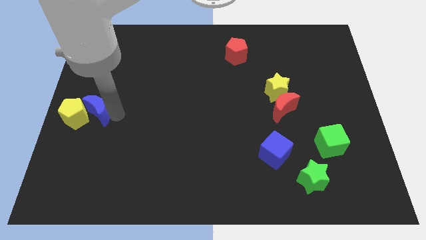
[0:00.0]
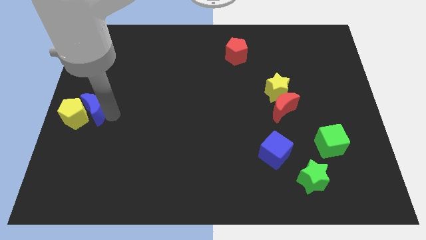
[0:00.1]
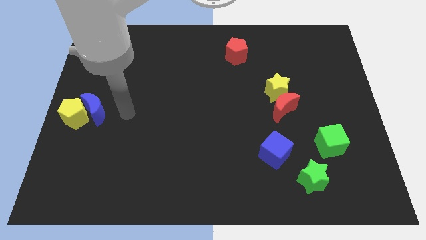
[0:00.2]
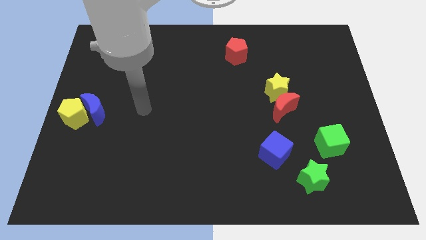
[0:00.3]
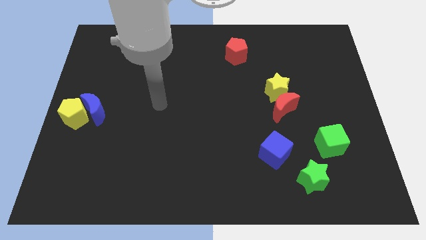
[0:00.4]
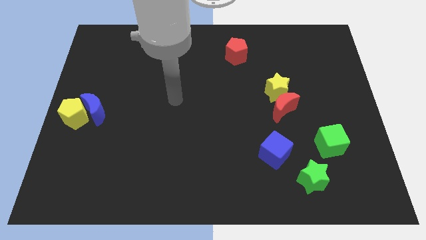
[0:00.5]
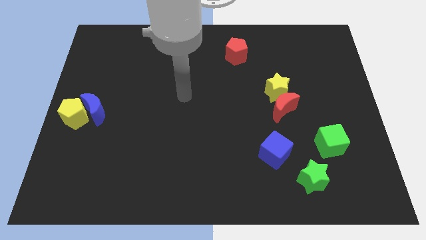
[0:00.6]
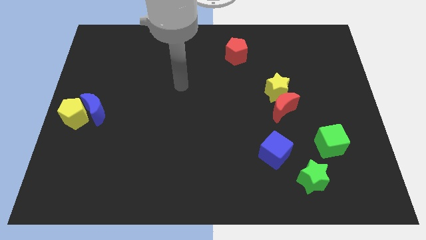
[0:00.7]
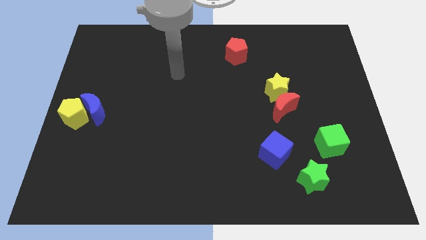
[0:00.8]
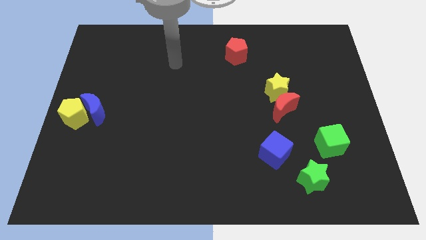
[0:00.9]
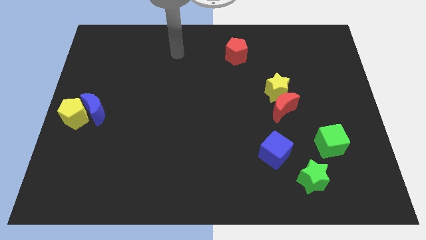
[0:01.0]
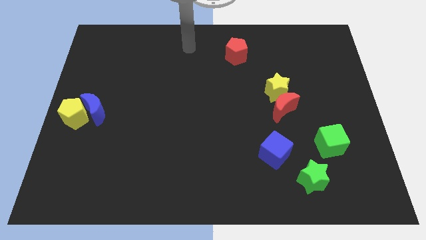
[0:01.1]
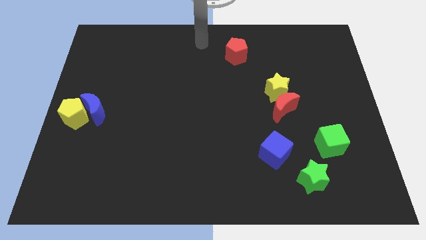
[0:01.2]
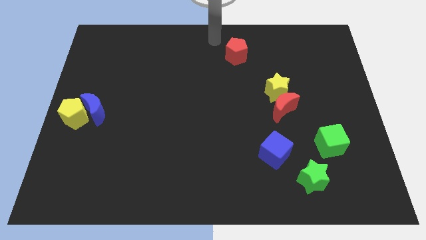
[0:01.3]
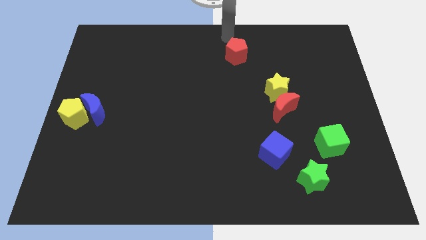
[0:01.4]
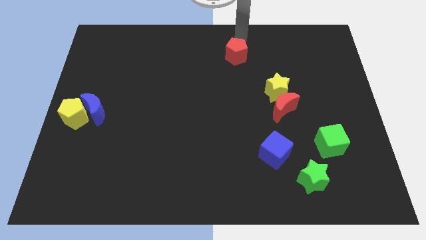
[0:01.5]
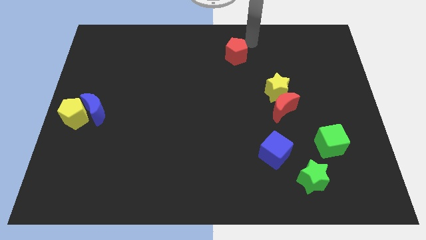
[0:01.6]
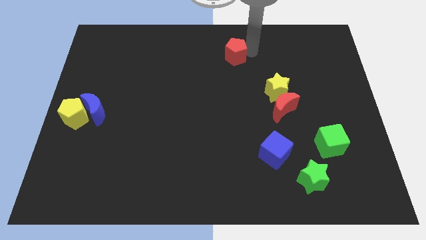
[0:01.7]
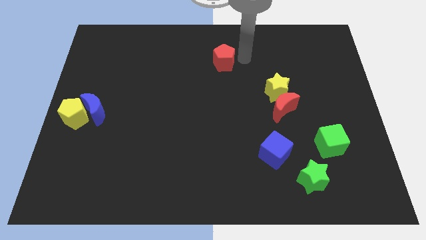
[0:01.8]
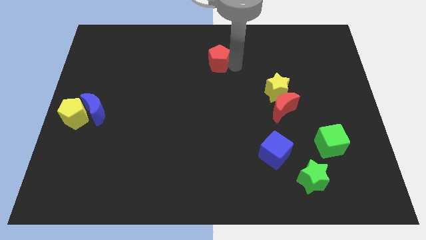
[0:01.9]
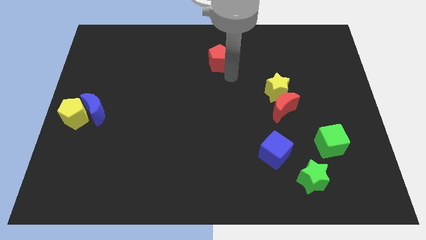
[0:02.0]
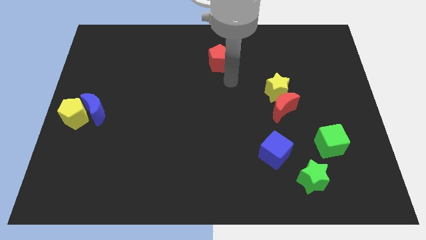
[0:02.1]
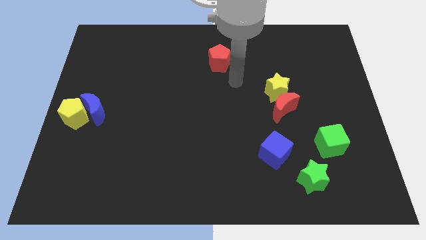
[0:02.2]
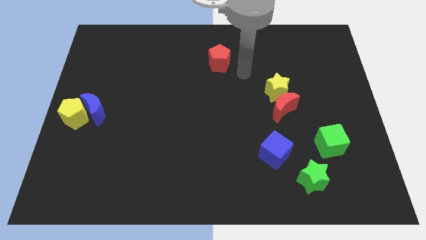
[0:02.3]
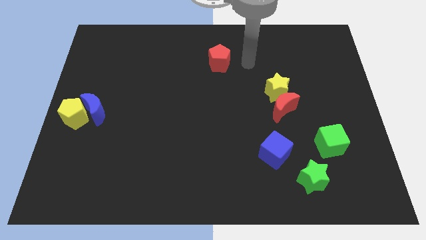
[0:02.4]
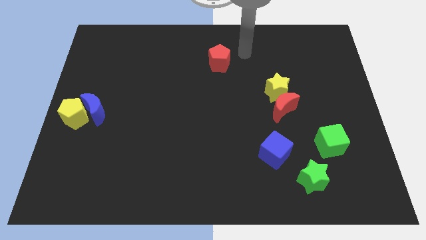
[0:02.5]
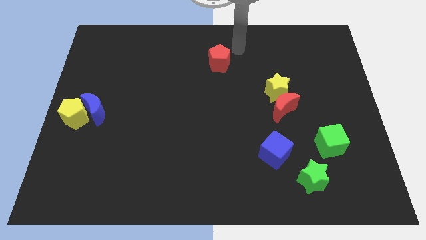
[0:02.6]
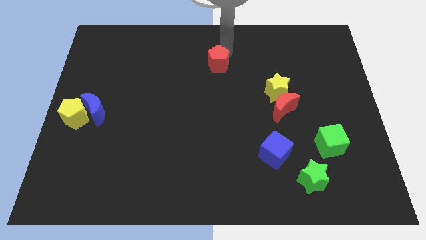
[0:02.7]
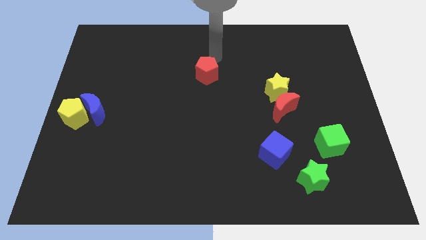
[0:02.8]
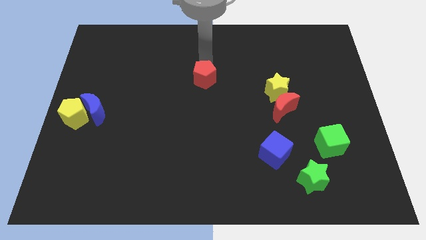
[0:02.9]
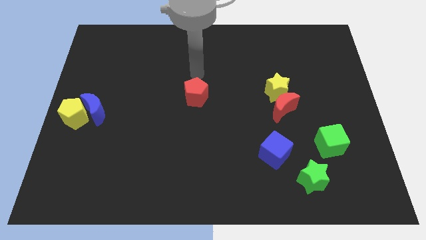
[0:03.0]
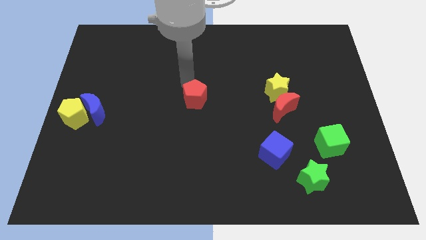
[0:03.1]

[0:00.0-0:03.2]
move the red pentagon to the left of the yellow star

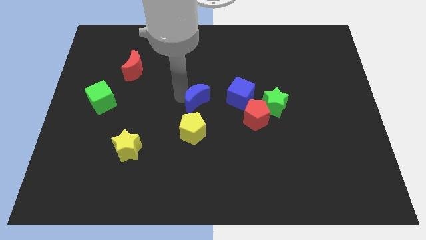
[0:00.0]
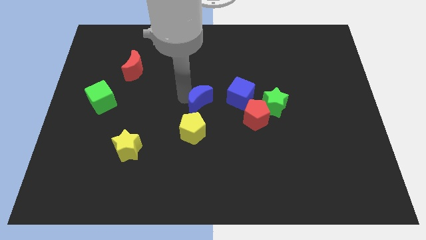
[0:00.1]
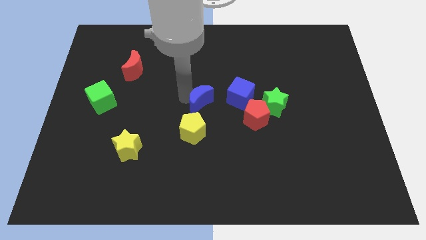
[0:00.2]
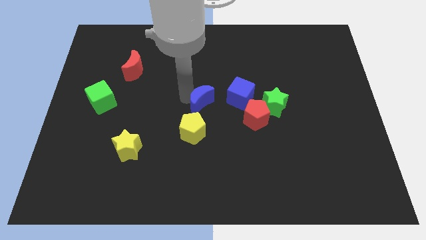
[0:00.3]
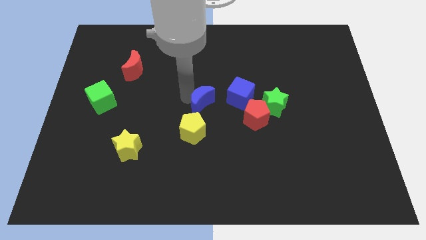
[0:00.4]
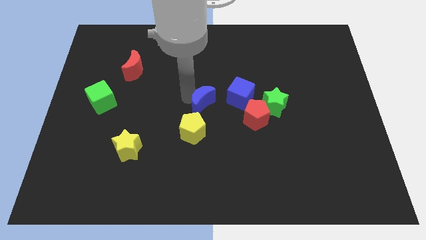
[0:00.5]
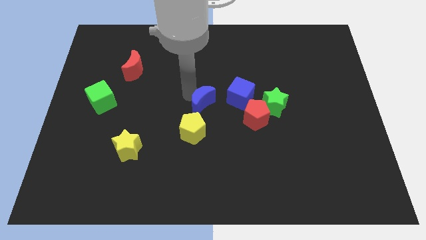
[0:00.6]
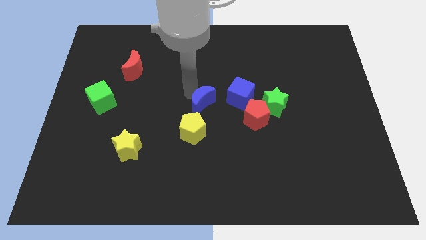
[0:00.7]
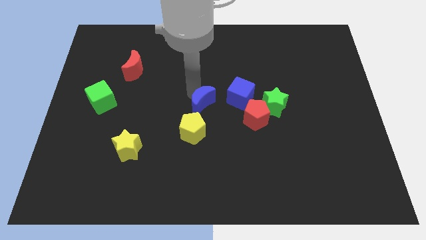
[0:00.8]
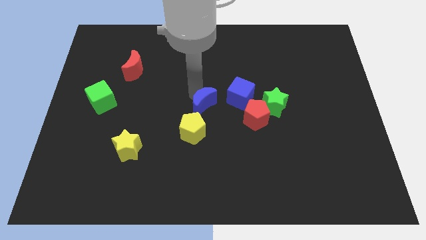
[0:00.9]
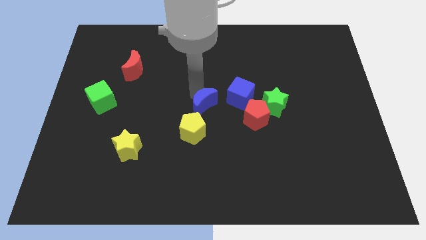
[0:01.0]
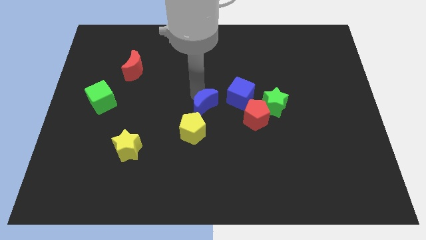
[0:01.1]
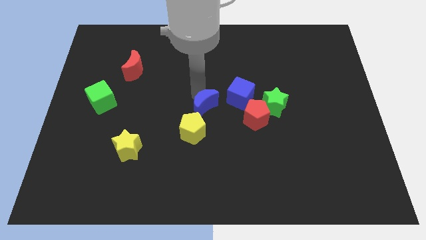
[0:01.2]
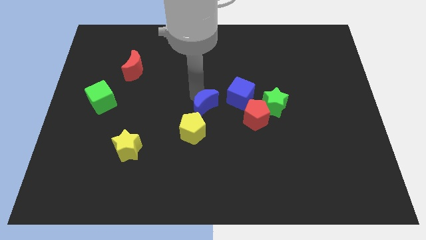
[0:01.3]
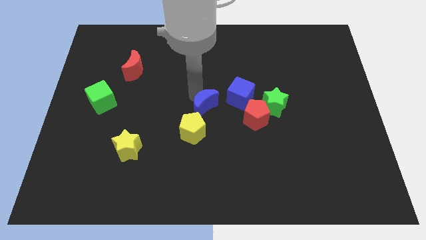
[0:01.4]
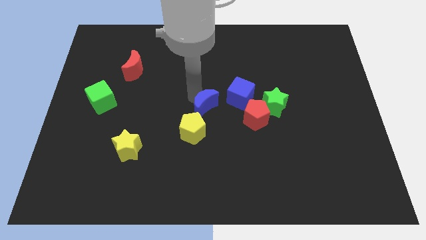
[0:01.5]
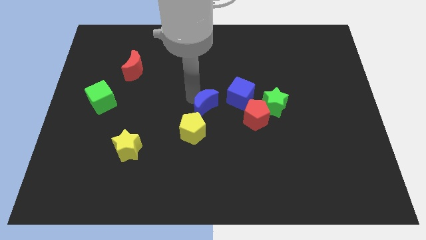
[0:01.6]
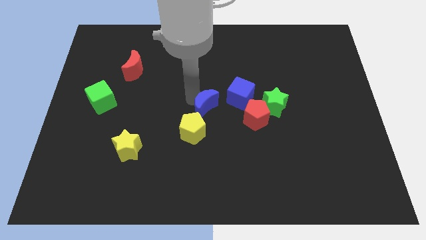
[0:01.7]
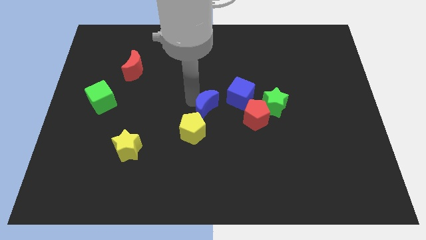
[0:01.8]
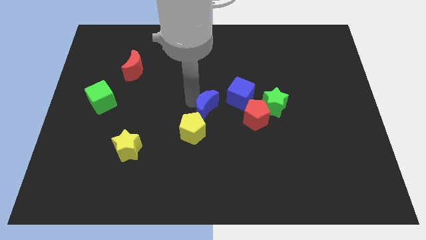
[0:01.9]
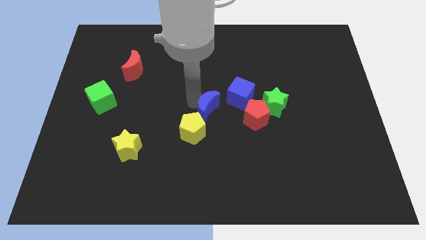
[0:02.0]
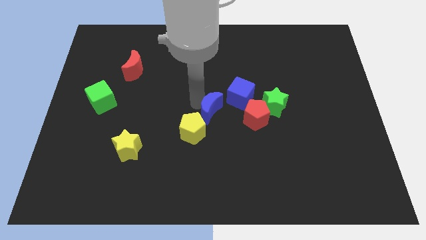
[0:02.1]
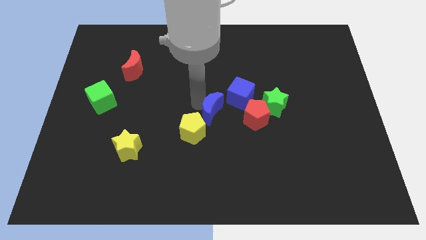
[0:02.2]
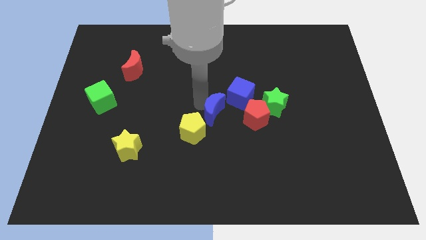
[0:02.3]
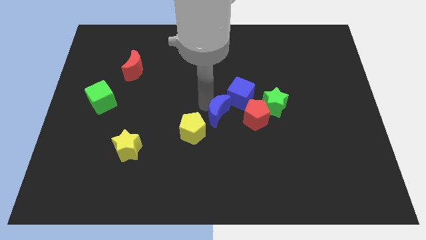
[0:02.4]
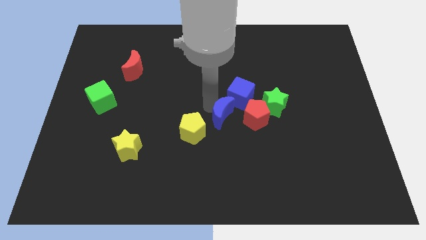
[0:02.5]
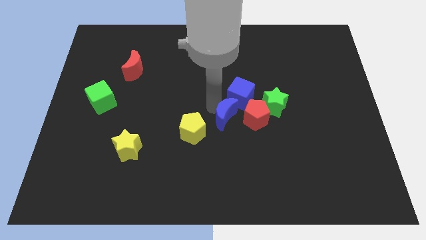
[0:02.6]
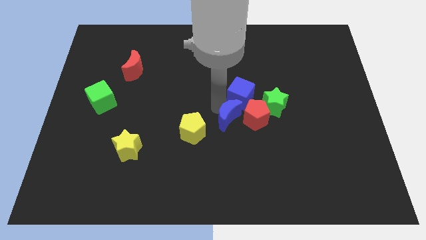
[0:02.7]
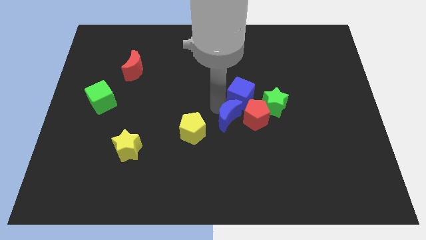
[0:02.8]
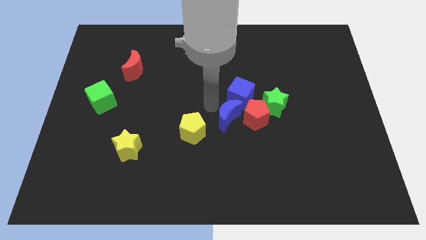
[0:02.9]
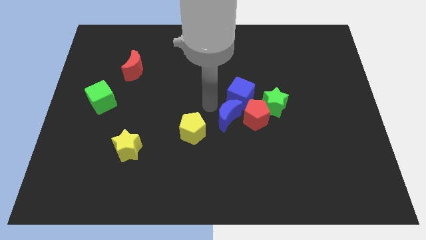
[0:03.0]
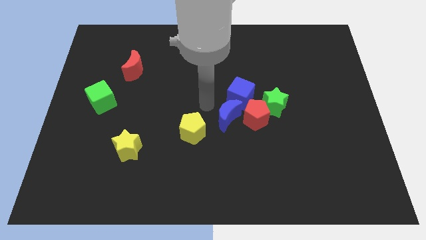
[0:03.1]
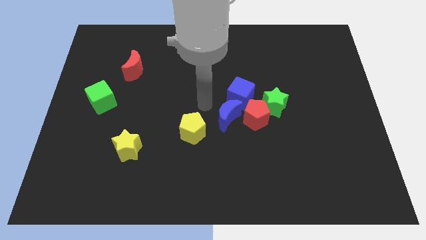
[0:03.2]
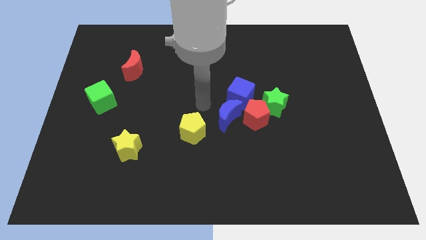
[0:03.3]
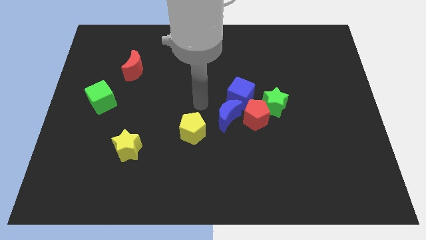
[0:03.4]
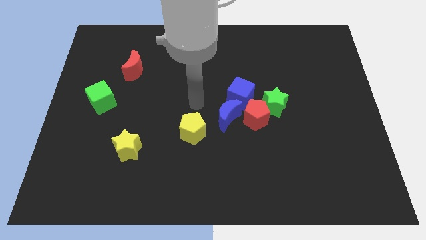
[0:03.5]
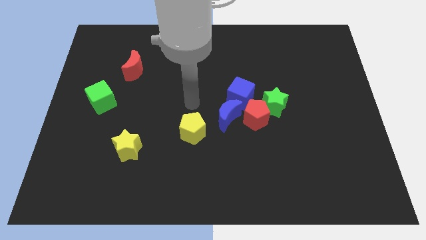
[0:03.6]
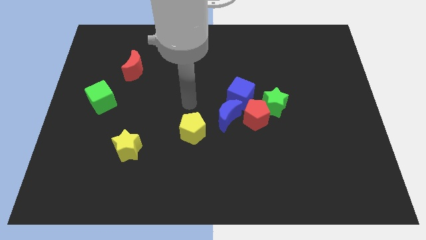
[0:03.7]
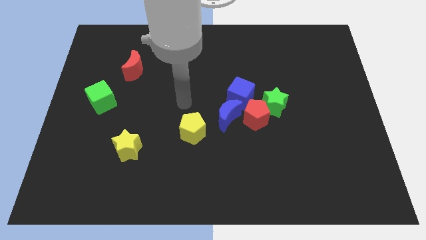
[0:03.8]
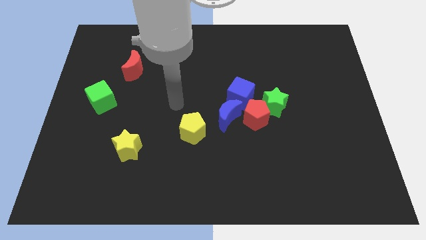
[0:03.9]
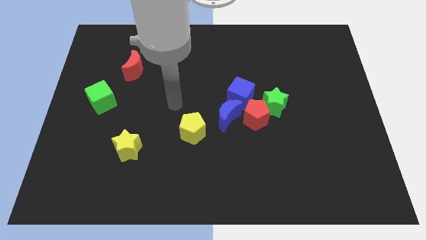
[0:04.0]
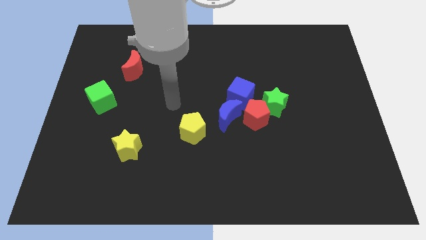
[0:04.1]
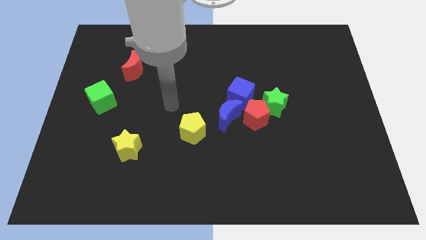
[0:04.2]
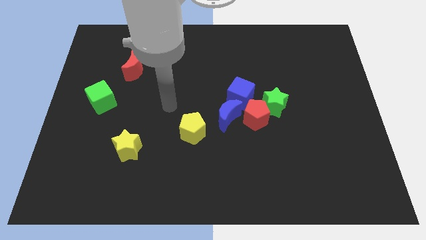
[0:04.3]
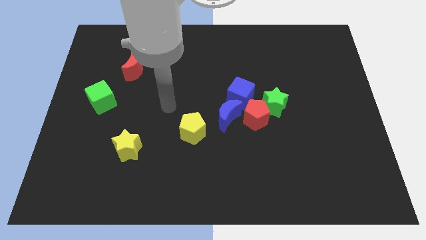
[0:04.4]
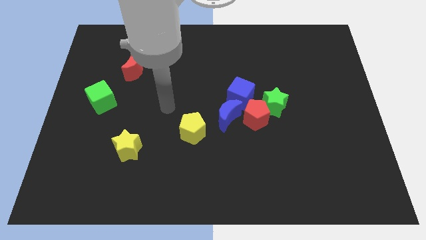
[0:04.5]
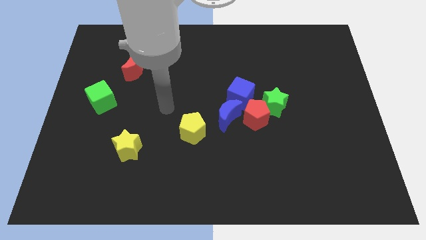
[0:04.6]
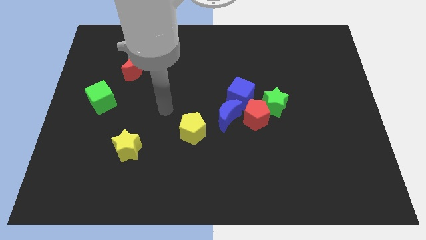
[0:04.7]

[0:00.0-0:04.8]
push blue moon into the group of blocks

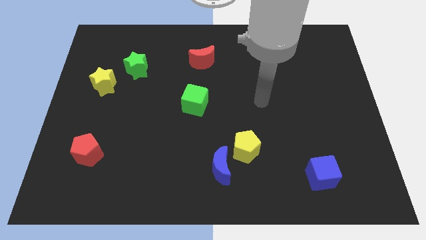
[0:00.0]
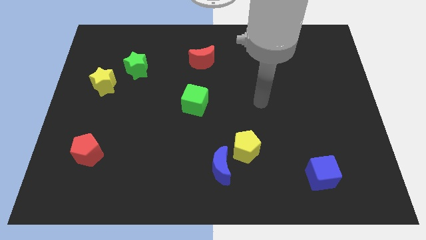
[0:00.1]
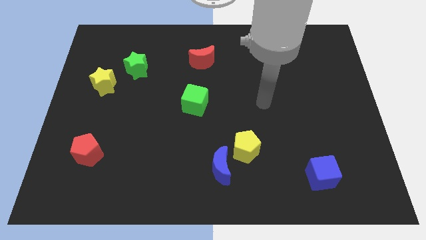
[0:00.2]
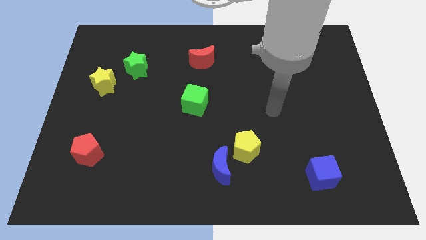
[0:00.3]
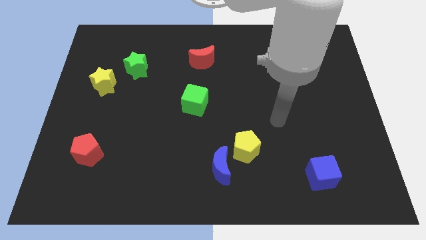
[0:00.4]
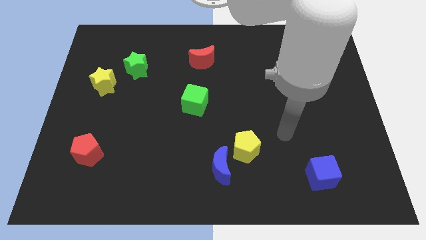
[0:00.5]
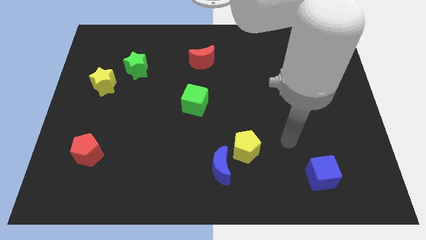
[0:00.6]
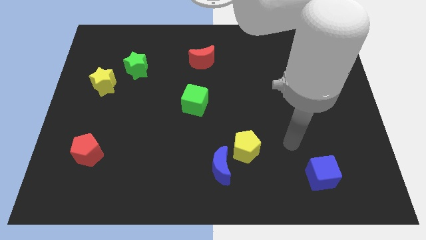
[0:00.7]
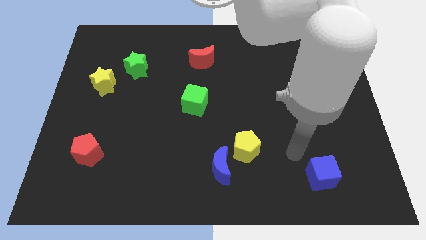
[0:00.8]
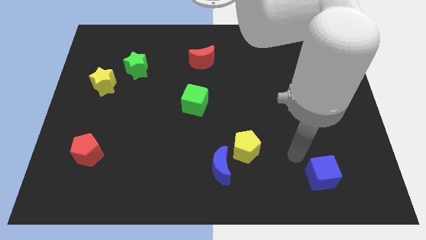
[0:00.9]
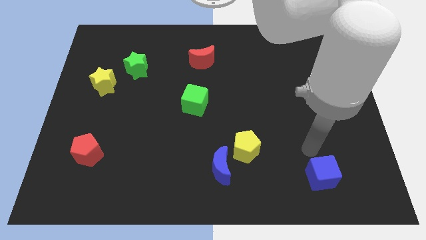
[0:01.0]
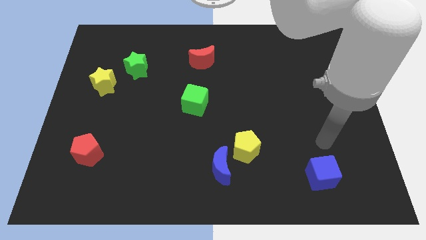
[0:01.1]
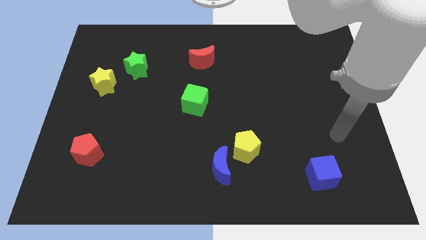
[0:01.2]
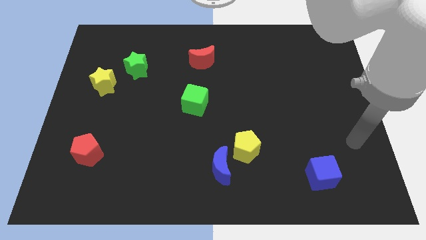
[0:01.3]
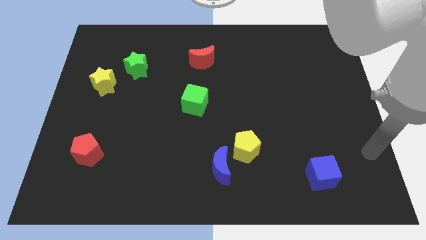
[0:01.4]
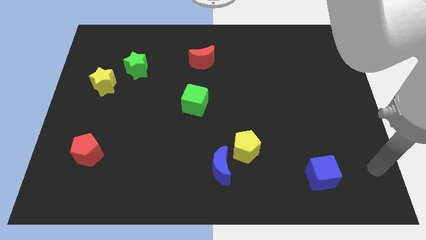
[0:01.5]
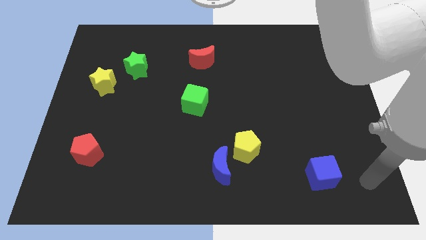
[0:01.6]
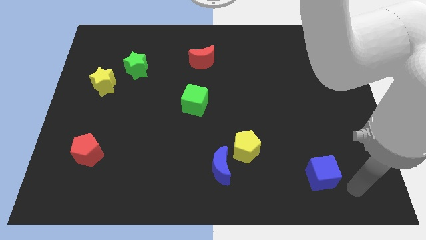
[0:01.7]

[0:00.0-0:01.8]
place your arm at the bottom right of the board
